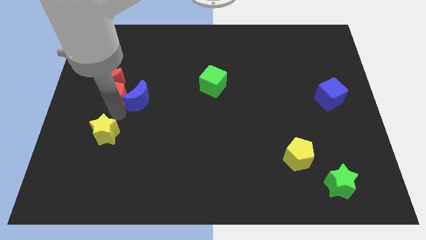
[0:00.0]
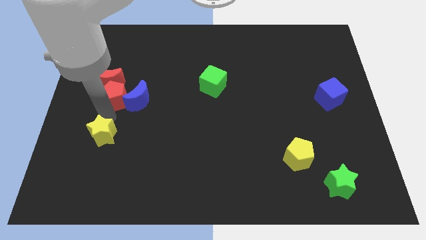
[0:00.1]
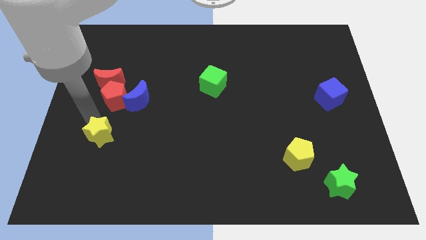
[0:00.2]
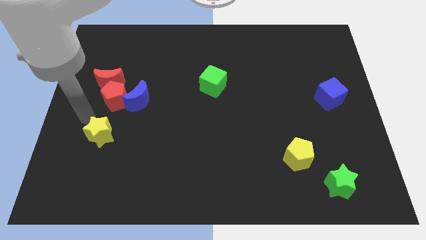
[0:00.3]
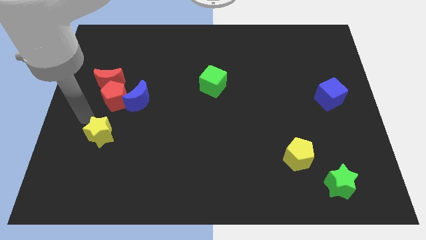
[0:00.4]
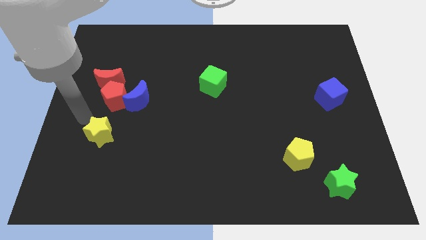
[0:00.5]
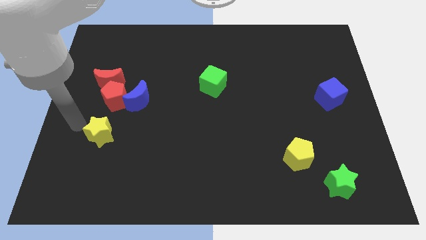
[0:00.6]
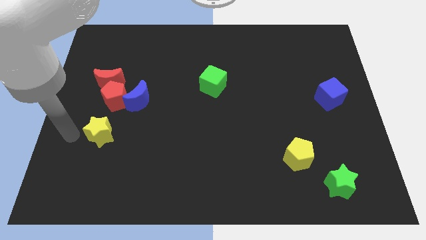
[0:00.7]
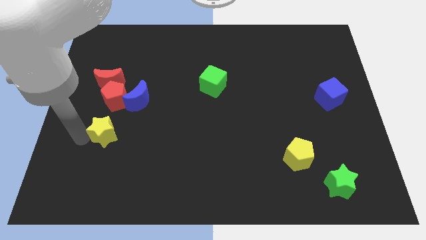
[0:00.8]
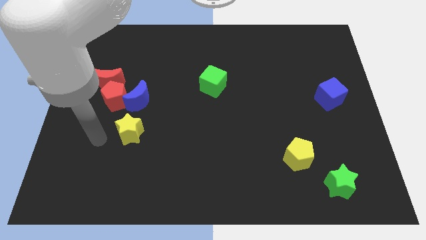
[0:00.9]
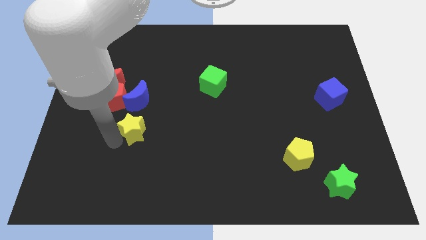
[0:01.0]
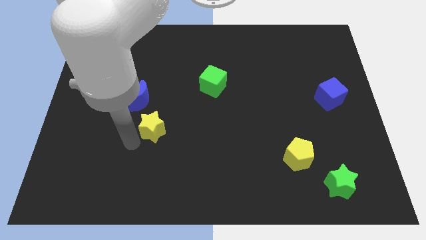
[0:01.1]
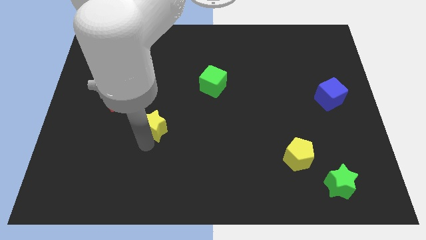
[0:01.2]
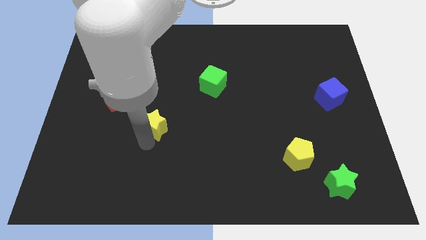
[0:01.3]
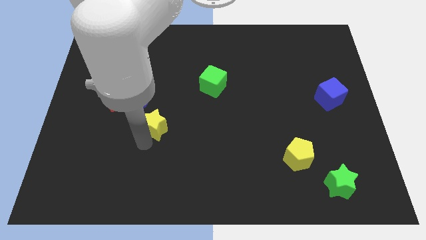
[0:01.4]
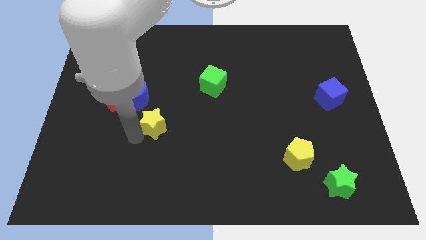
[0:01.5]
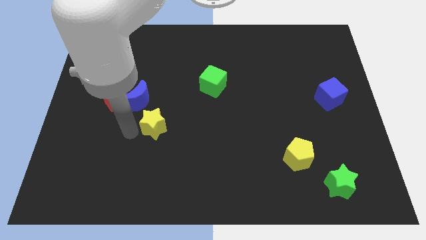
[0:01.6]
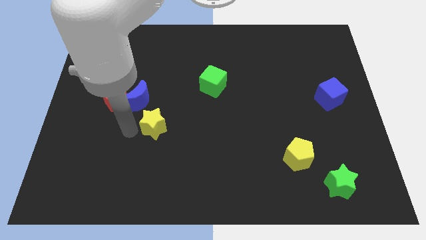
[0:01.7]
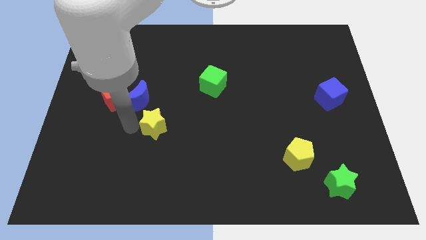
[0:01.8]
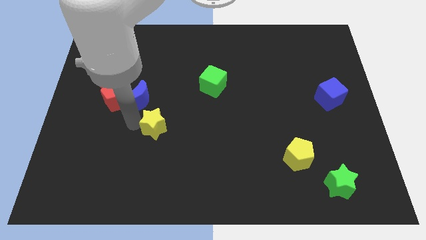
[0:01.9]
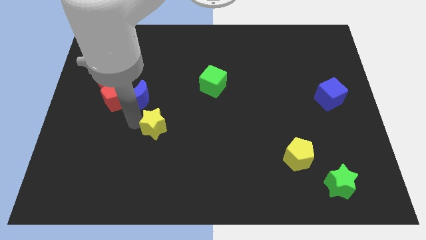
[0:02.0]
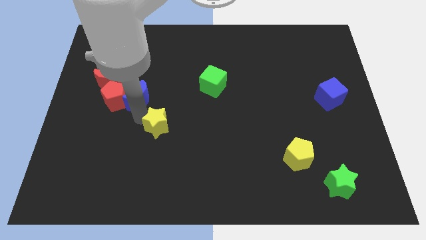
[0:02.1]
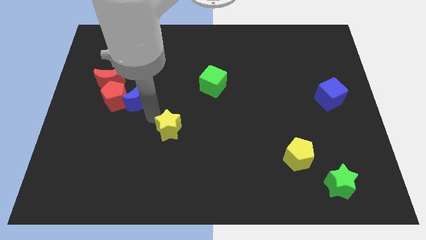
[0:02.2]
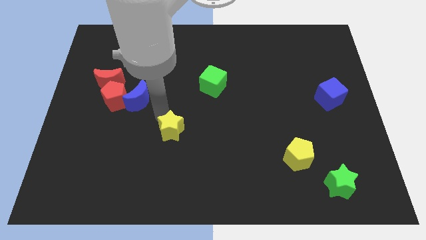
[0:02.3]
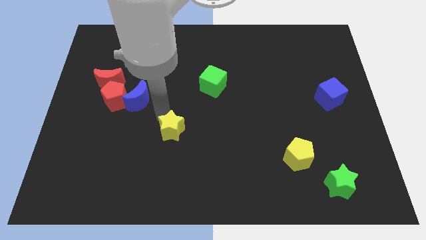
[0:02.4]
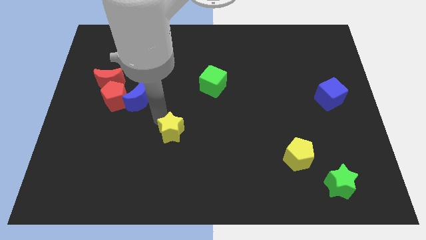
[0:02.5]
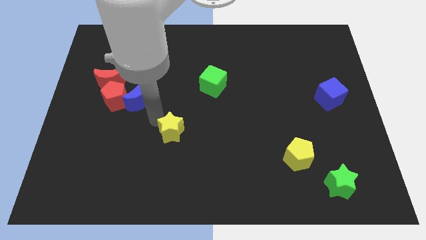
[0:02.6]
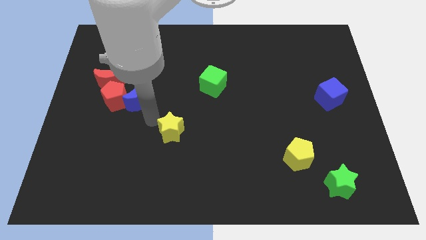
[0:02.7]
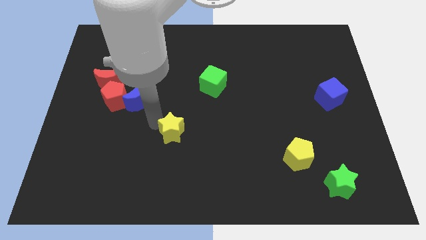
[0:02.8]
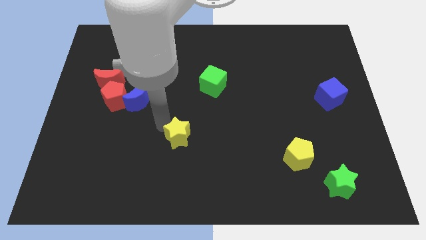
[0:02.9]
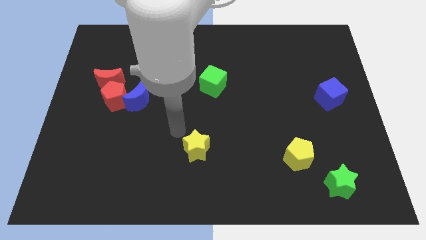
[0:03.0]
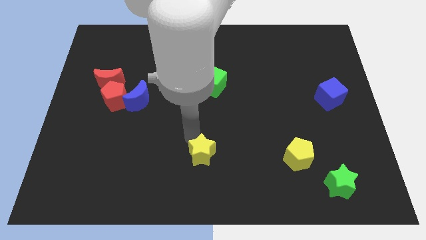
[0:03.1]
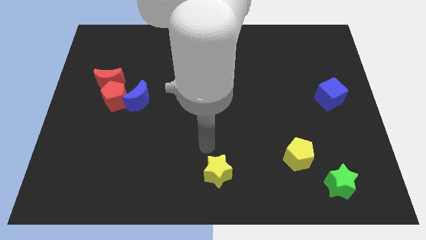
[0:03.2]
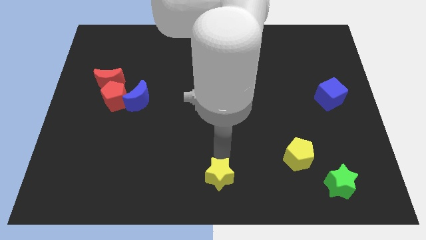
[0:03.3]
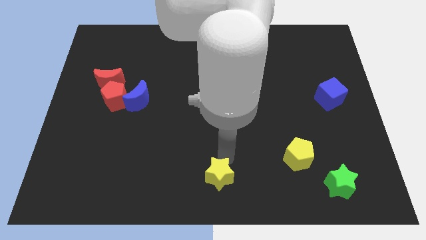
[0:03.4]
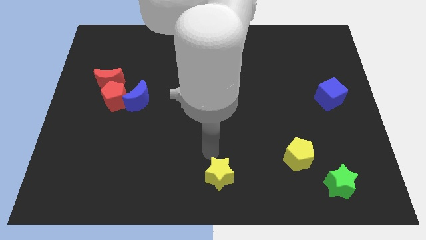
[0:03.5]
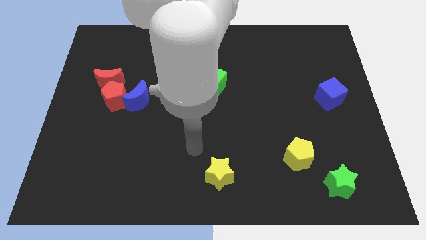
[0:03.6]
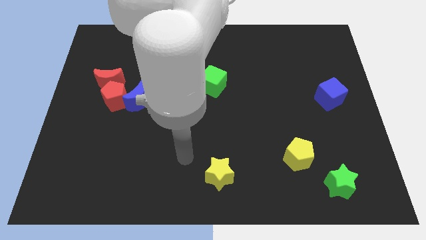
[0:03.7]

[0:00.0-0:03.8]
move the yellow star towards the bottom center of the board

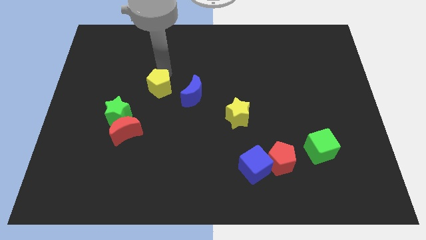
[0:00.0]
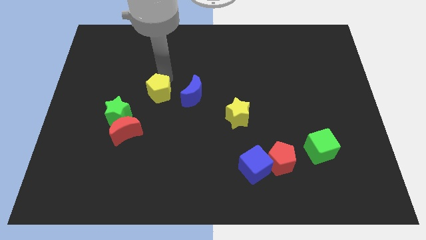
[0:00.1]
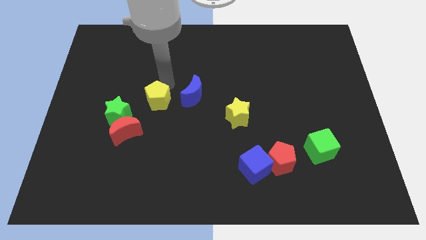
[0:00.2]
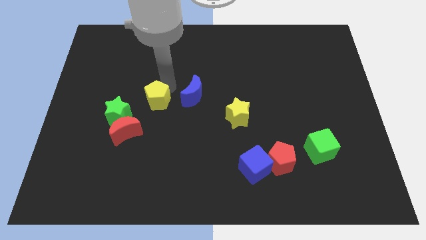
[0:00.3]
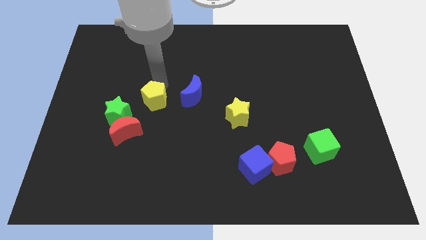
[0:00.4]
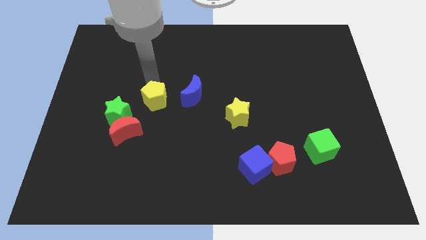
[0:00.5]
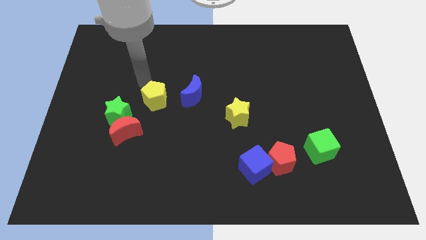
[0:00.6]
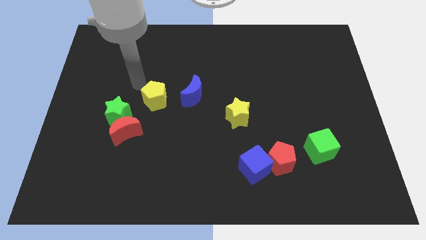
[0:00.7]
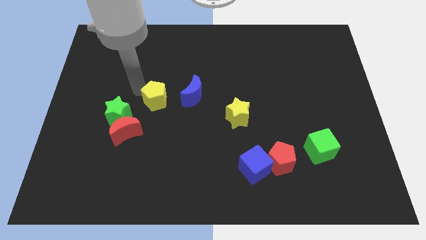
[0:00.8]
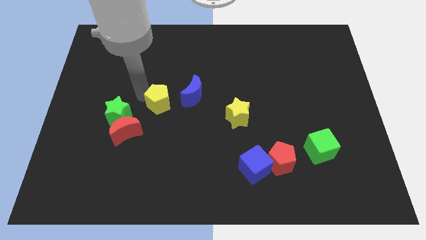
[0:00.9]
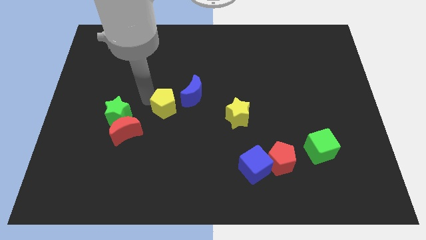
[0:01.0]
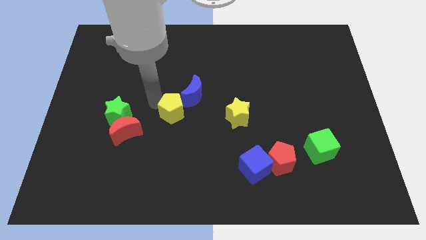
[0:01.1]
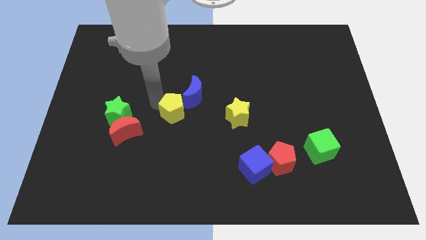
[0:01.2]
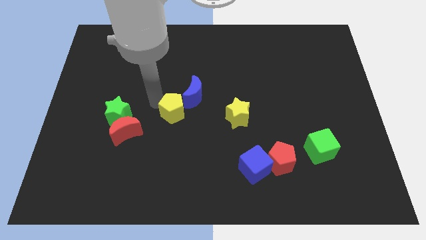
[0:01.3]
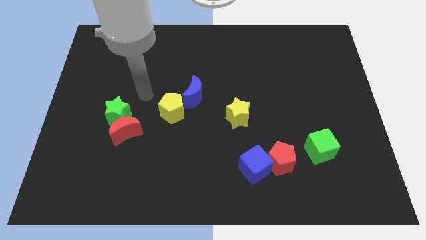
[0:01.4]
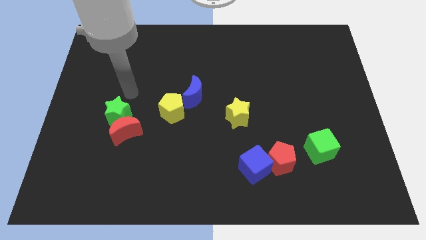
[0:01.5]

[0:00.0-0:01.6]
place yellow pentagon to the bottom left of blue moon

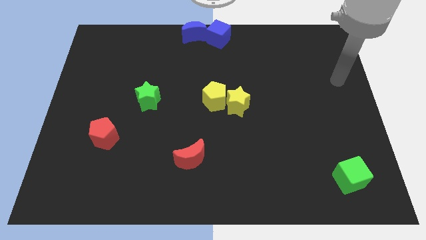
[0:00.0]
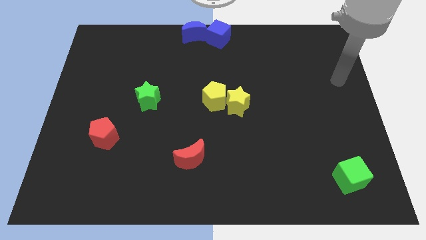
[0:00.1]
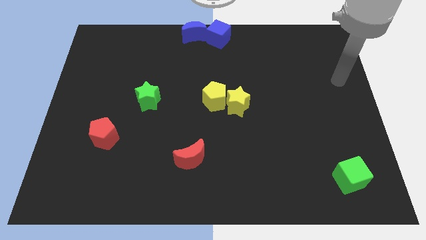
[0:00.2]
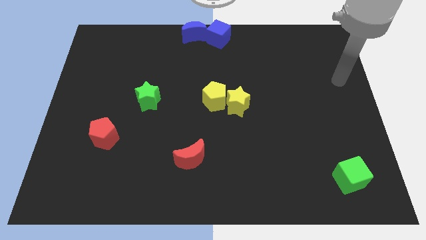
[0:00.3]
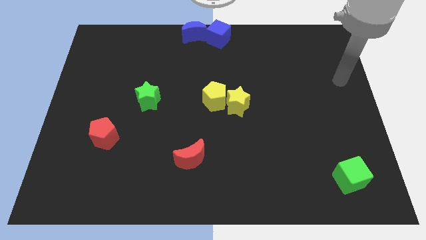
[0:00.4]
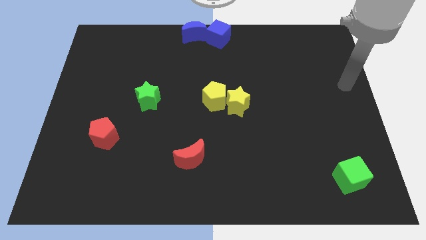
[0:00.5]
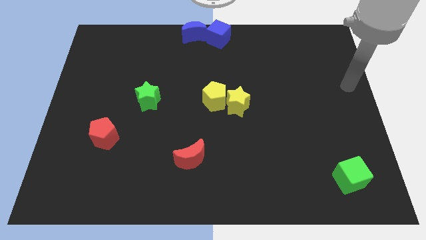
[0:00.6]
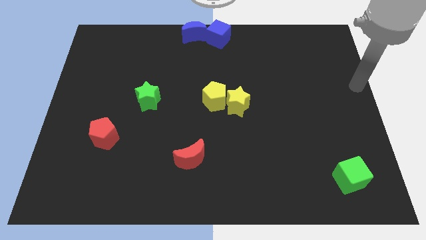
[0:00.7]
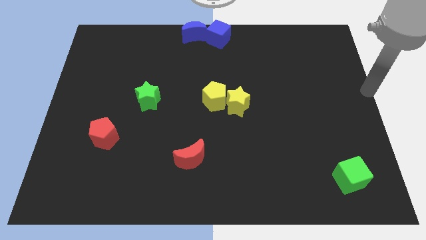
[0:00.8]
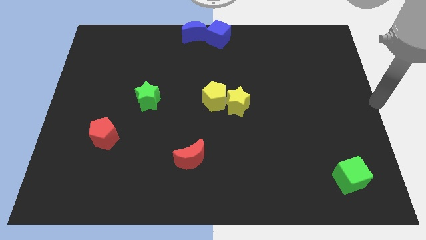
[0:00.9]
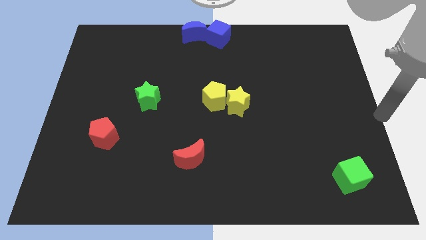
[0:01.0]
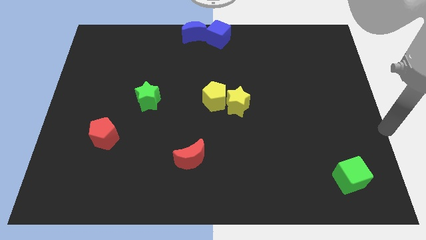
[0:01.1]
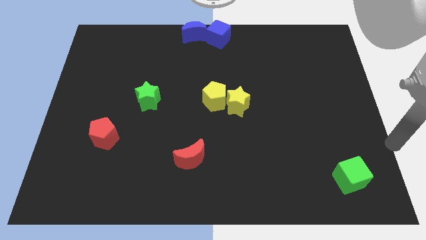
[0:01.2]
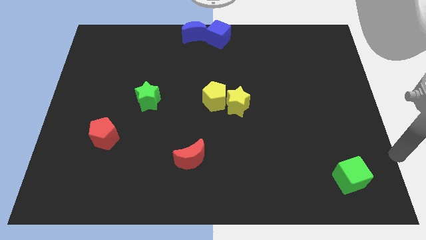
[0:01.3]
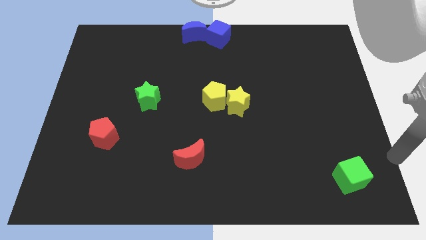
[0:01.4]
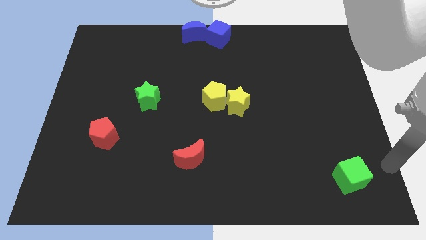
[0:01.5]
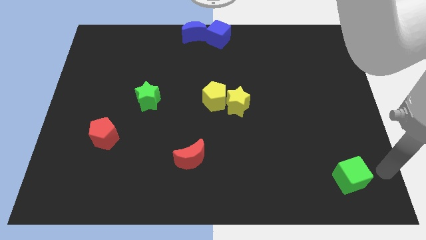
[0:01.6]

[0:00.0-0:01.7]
move your arm right to the green cube

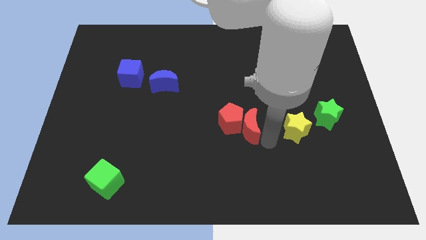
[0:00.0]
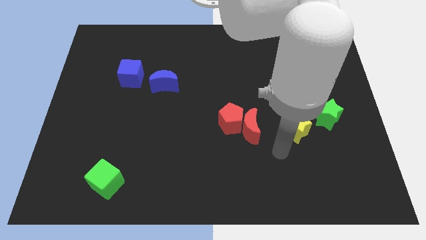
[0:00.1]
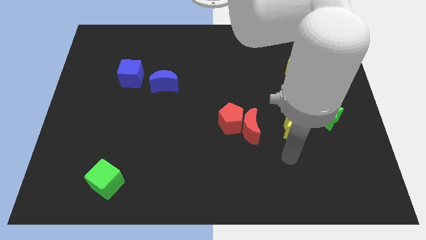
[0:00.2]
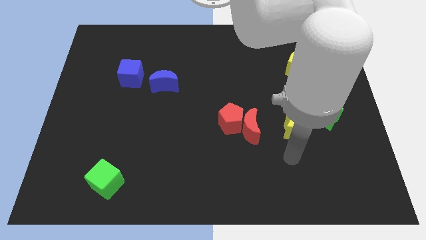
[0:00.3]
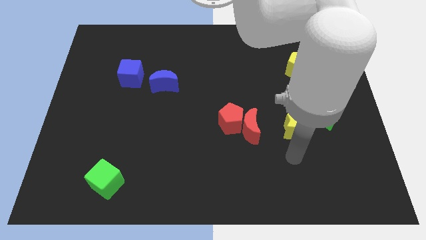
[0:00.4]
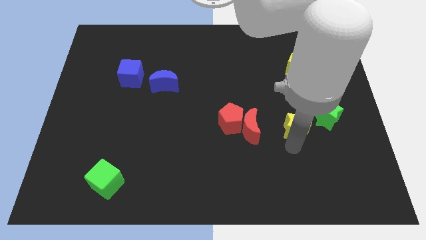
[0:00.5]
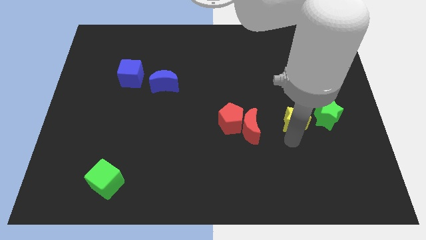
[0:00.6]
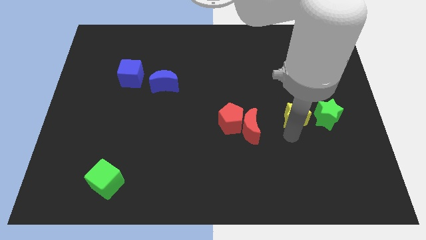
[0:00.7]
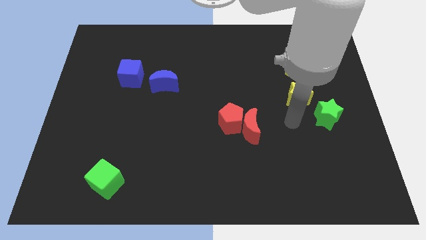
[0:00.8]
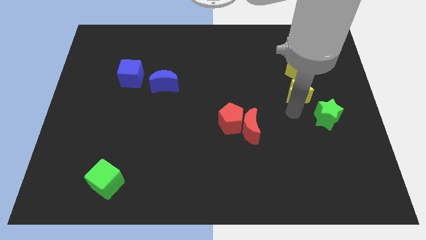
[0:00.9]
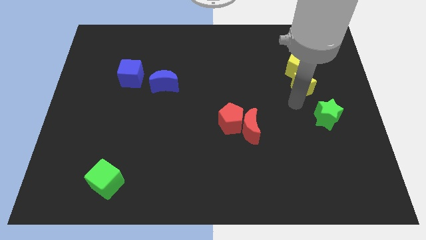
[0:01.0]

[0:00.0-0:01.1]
move the yellow star to the bottom of the yellow pentagon

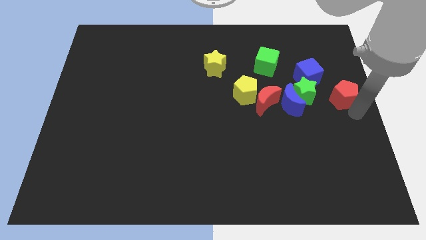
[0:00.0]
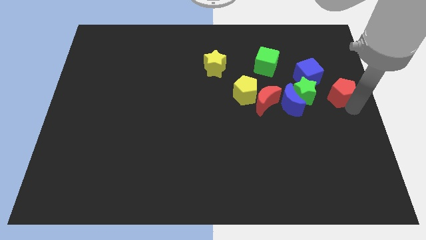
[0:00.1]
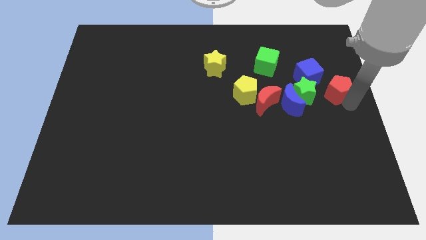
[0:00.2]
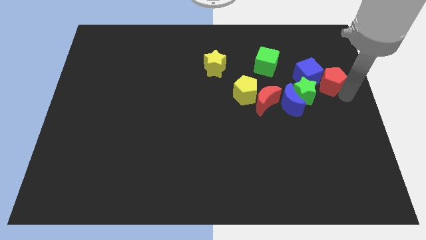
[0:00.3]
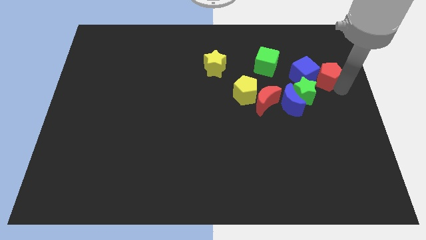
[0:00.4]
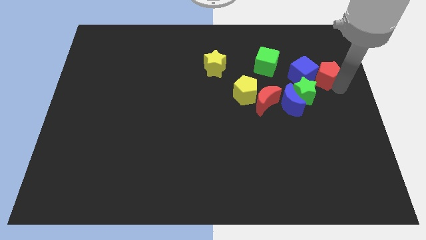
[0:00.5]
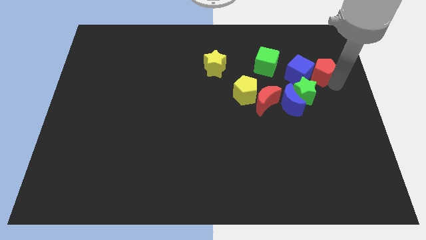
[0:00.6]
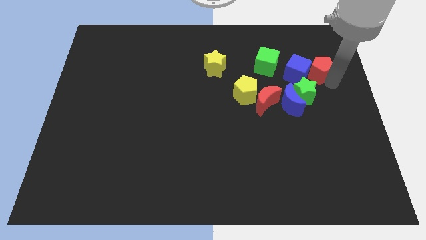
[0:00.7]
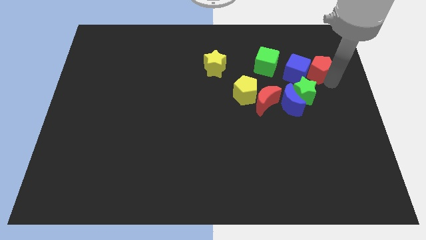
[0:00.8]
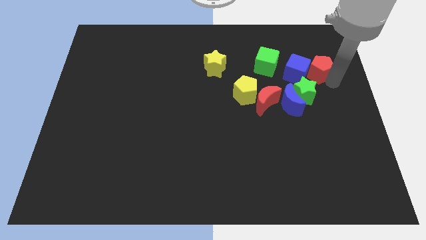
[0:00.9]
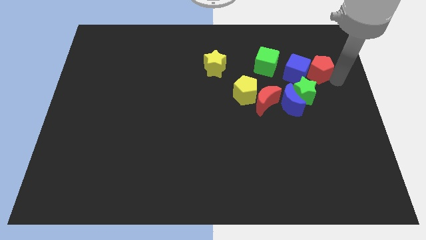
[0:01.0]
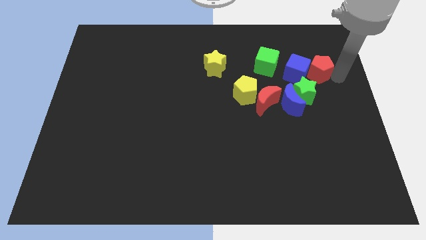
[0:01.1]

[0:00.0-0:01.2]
push the red pentagon into the blue cube
